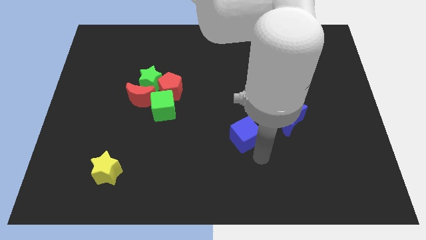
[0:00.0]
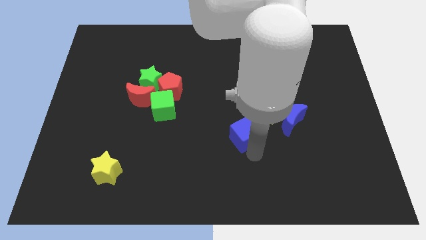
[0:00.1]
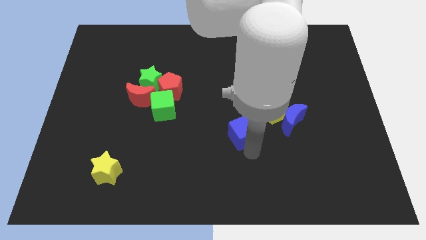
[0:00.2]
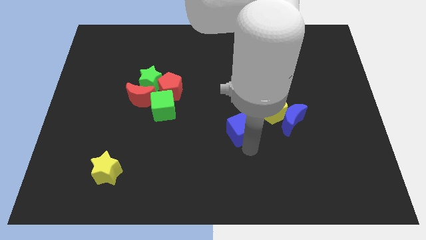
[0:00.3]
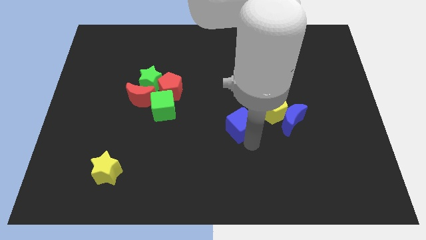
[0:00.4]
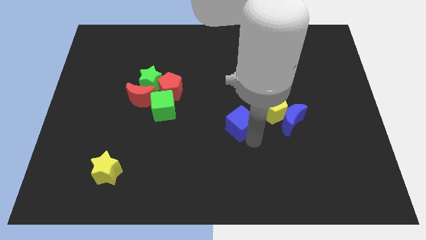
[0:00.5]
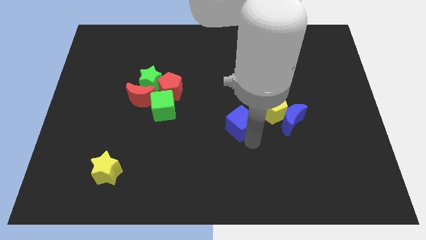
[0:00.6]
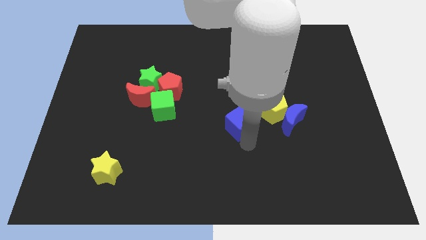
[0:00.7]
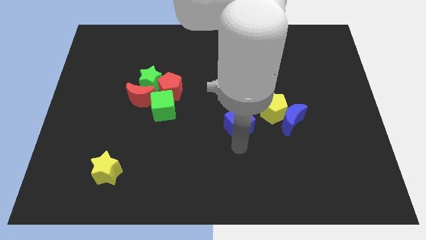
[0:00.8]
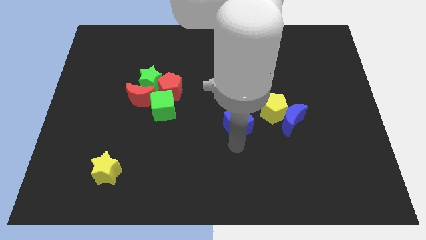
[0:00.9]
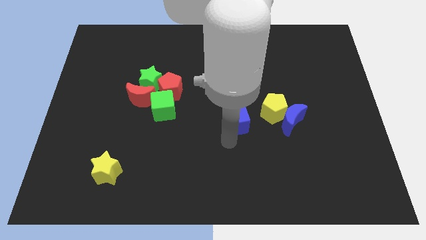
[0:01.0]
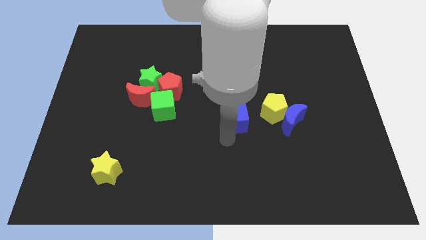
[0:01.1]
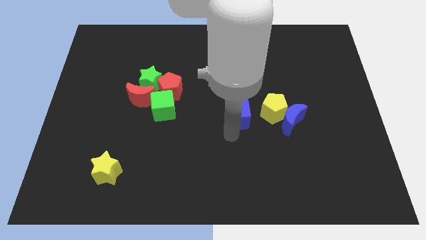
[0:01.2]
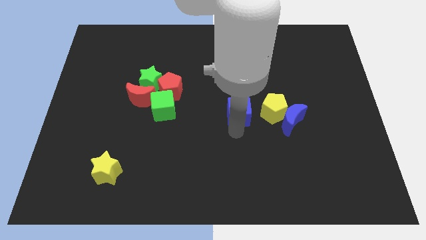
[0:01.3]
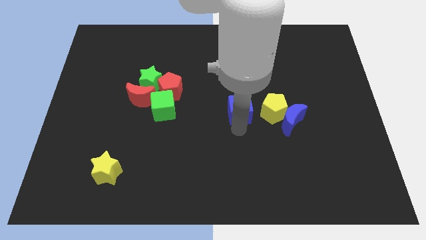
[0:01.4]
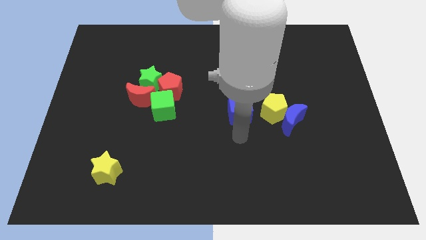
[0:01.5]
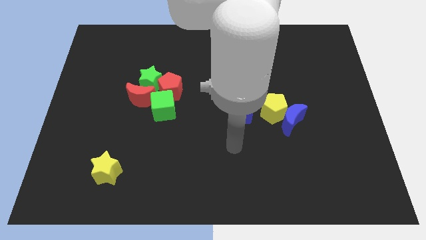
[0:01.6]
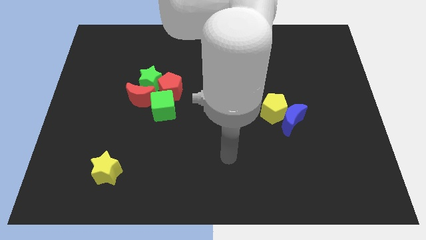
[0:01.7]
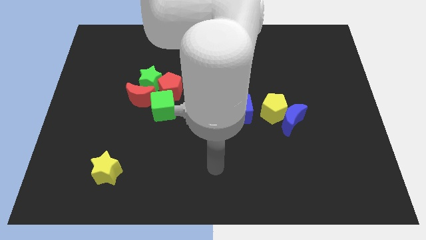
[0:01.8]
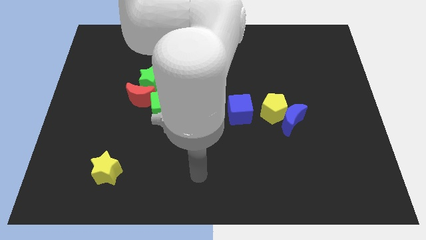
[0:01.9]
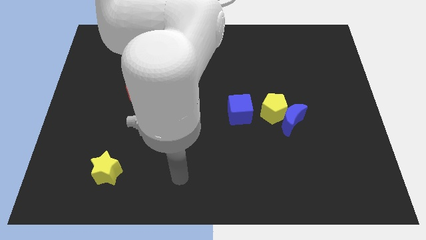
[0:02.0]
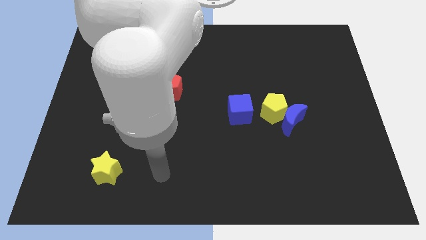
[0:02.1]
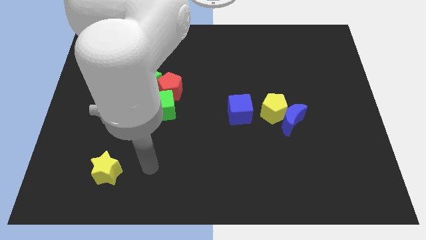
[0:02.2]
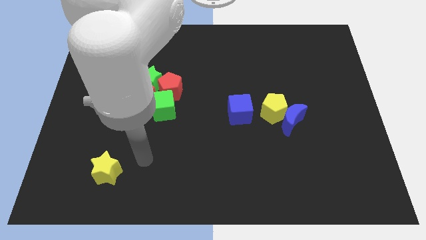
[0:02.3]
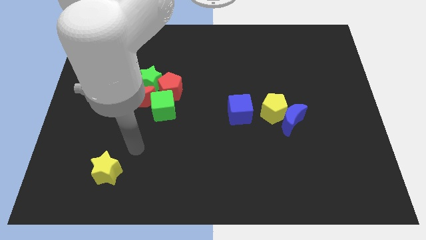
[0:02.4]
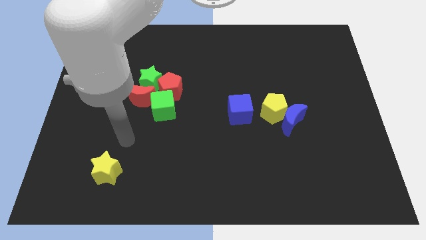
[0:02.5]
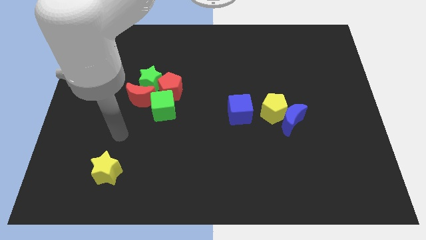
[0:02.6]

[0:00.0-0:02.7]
place the blue cube left to the yellow pentagon

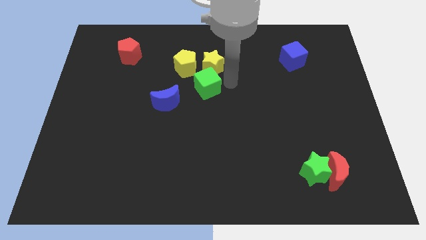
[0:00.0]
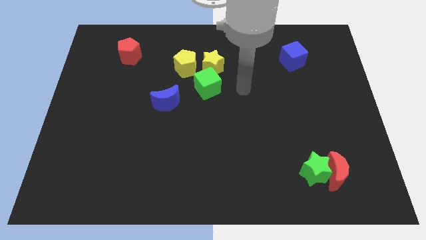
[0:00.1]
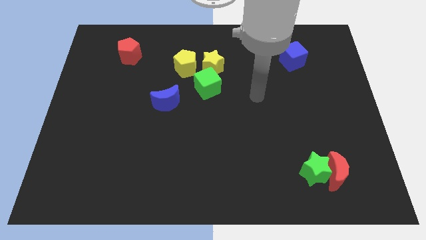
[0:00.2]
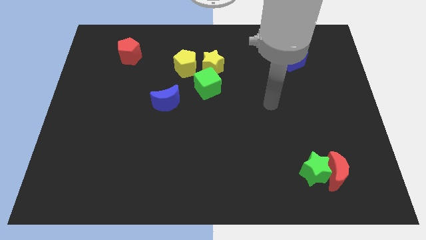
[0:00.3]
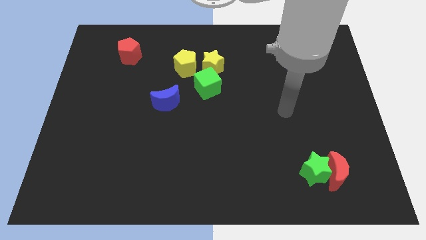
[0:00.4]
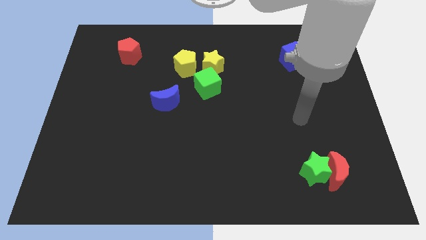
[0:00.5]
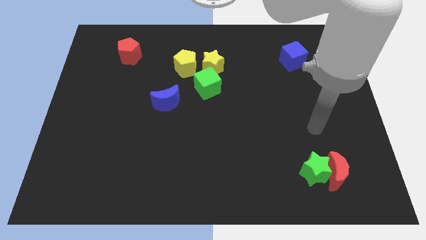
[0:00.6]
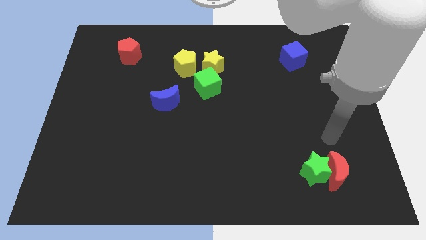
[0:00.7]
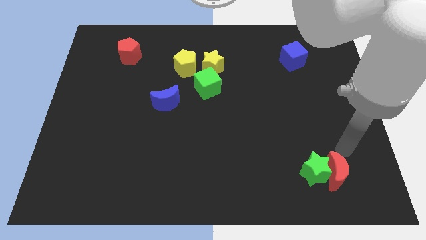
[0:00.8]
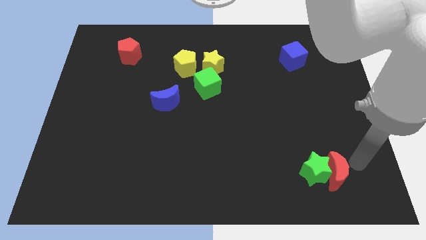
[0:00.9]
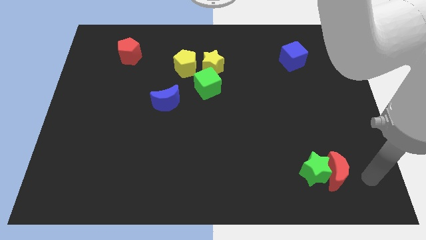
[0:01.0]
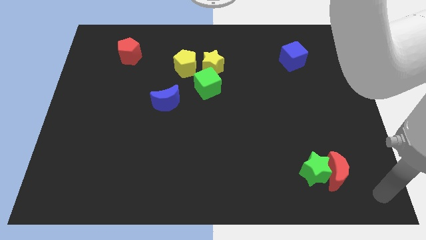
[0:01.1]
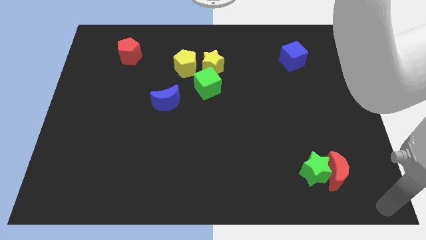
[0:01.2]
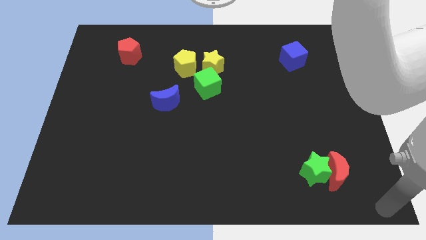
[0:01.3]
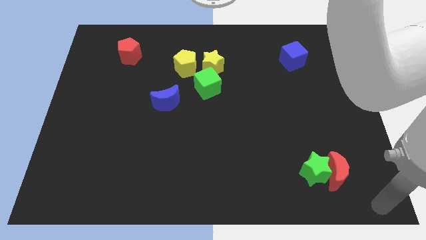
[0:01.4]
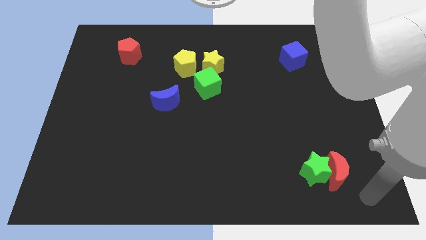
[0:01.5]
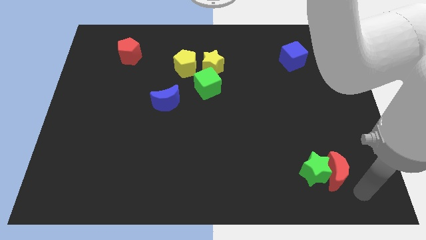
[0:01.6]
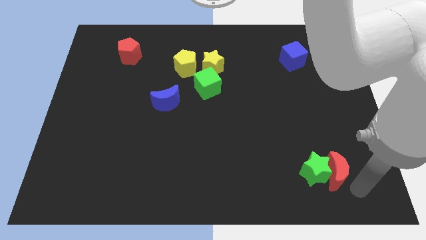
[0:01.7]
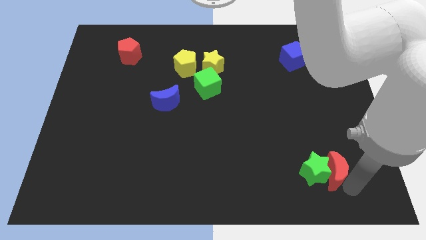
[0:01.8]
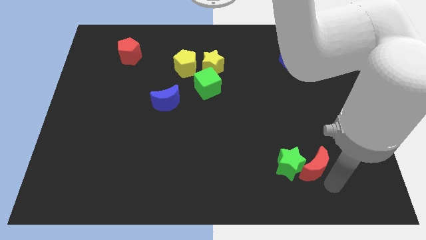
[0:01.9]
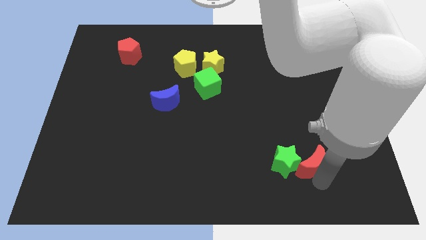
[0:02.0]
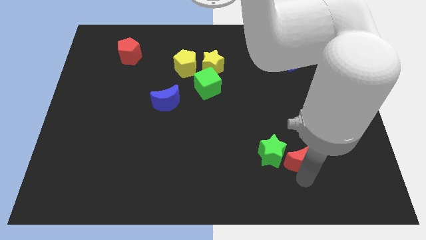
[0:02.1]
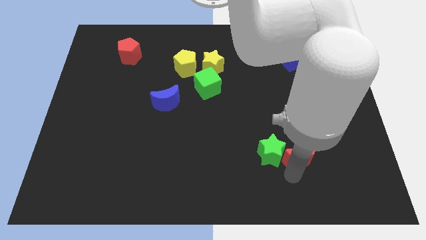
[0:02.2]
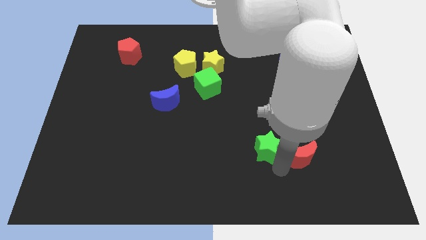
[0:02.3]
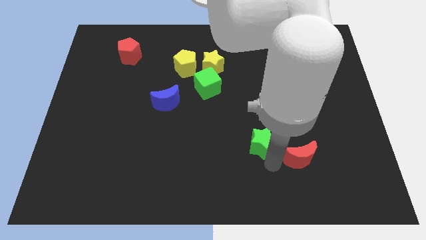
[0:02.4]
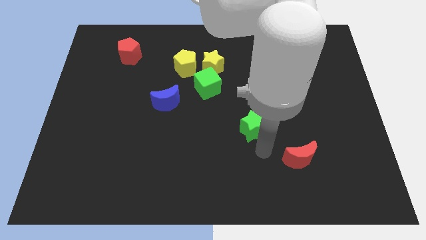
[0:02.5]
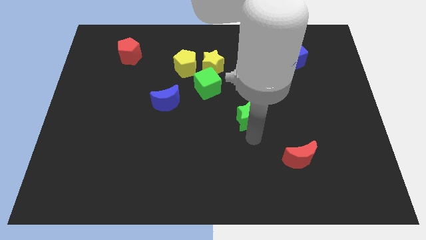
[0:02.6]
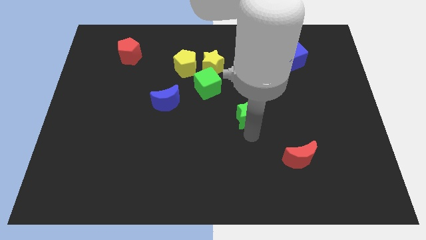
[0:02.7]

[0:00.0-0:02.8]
put the green star between the green cube and red crescent

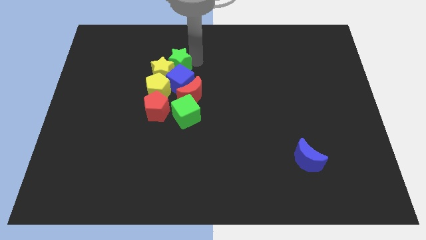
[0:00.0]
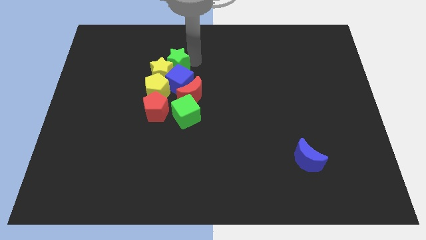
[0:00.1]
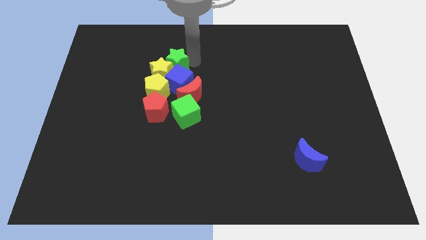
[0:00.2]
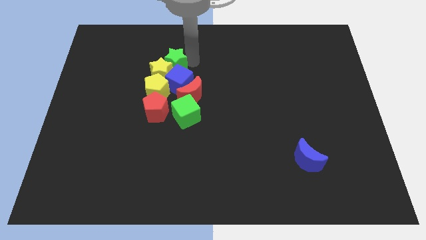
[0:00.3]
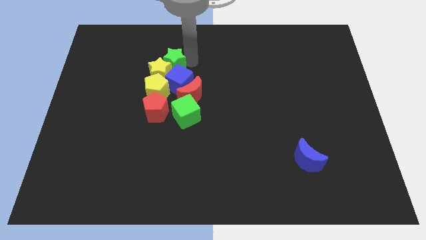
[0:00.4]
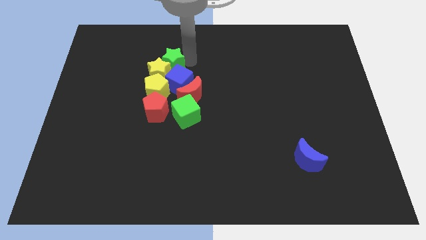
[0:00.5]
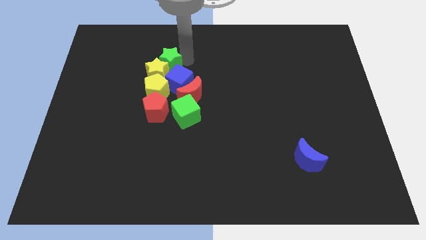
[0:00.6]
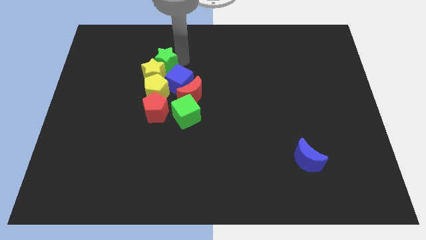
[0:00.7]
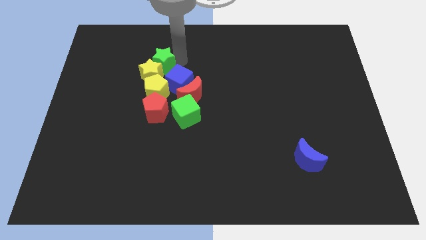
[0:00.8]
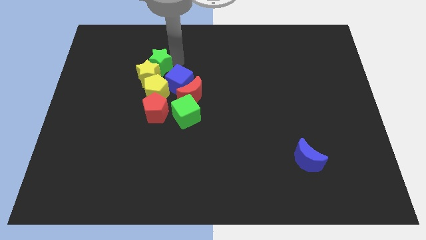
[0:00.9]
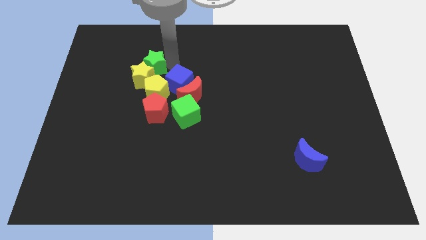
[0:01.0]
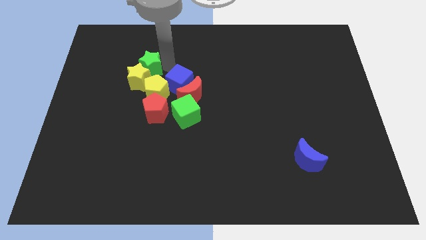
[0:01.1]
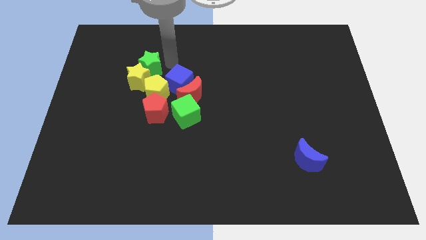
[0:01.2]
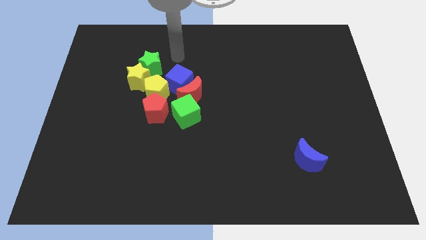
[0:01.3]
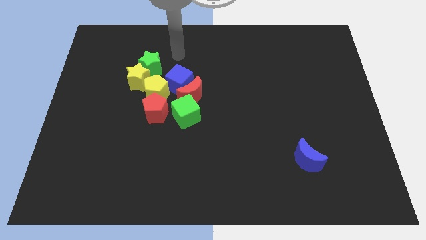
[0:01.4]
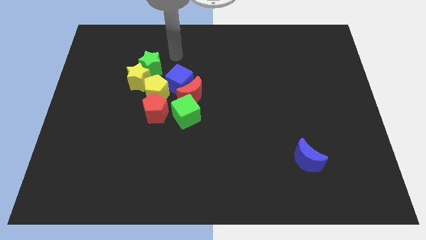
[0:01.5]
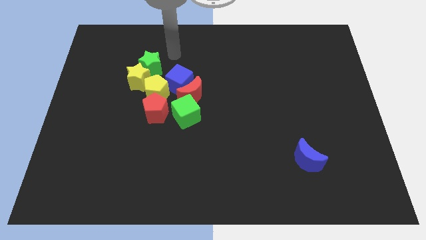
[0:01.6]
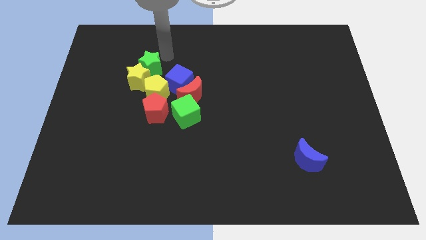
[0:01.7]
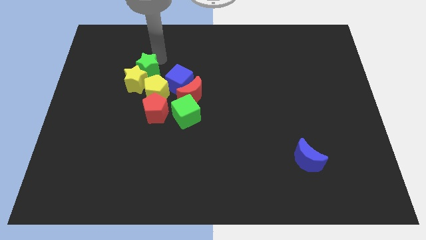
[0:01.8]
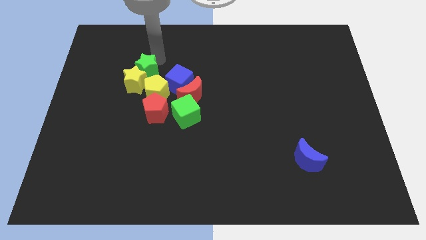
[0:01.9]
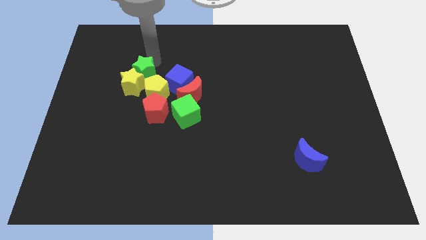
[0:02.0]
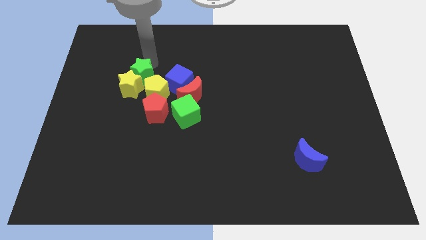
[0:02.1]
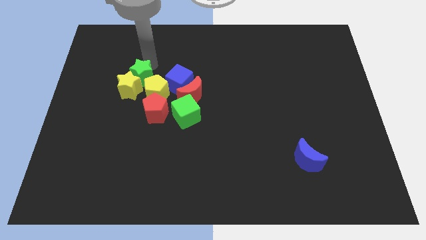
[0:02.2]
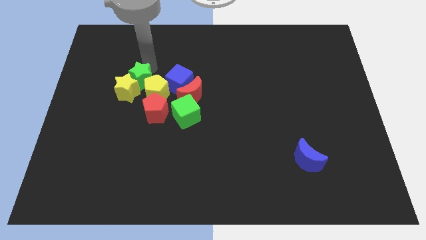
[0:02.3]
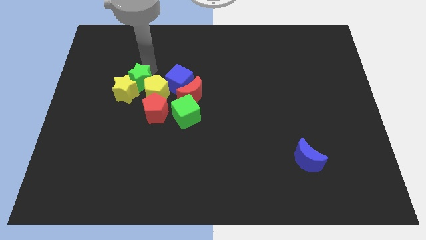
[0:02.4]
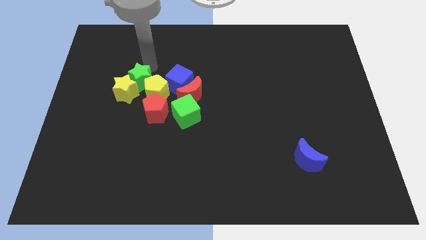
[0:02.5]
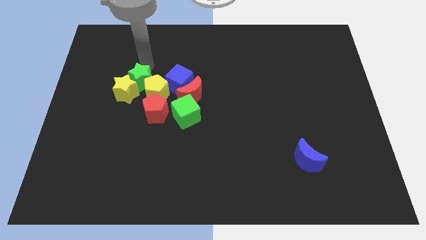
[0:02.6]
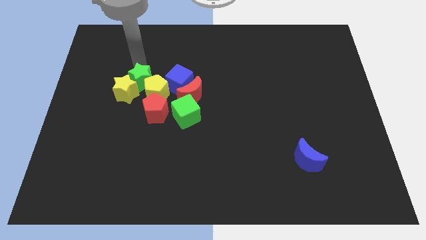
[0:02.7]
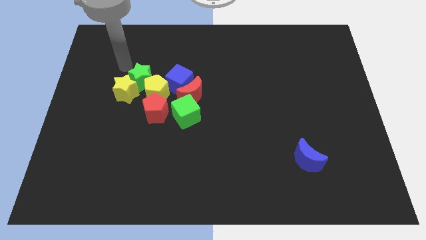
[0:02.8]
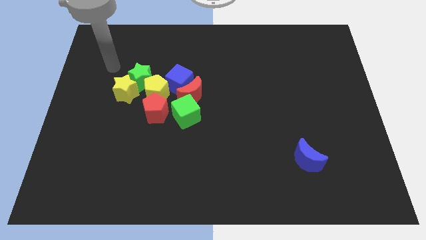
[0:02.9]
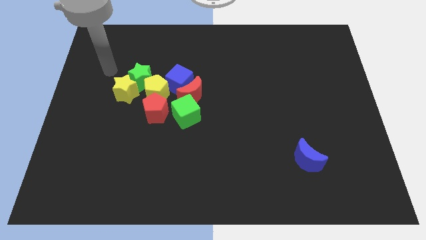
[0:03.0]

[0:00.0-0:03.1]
drag the yellow and the green star towards the center left

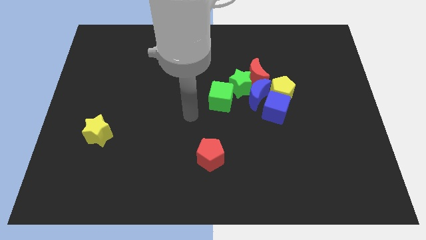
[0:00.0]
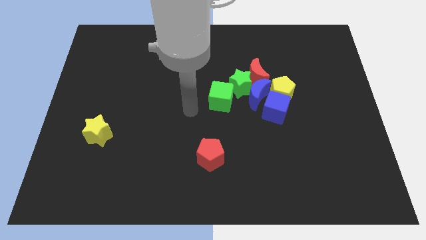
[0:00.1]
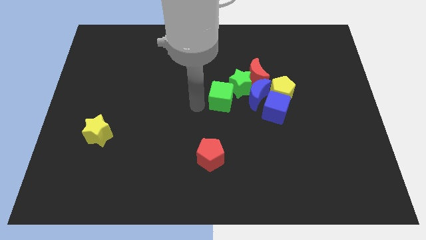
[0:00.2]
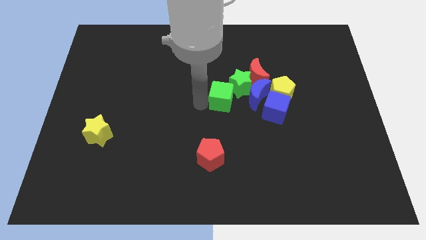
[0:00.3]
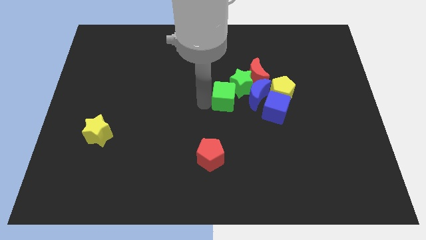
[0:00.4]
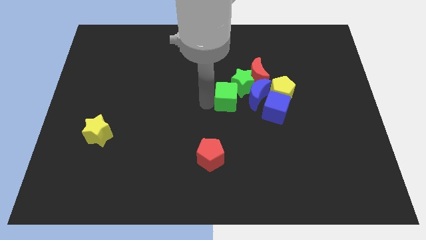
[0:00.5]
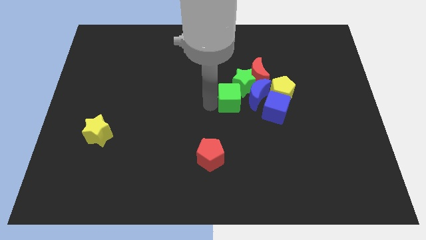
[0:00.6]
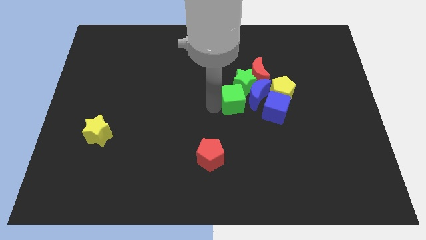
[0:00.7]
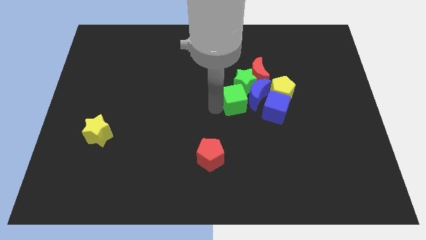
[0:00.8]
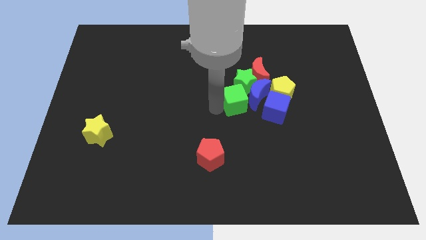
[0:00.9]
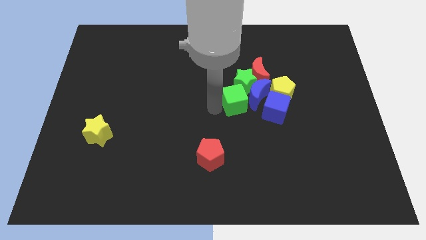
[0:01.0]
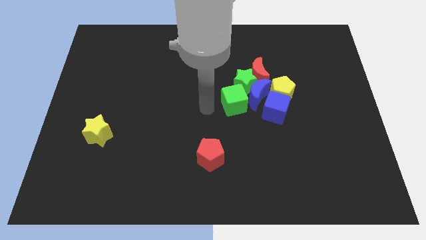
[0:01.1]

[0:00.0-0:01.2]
push the green cube to the bottom of the green star
